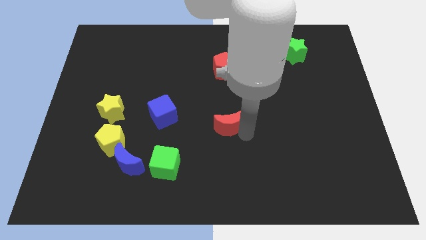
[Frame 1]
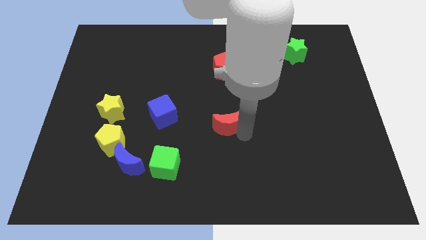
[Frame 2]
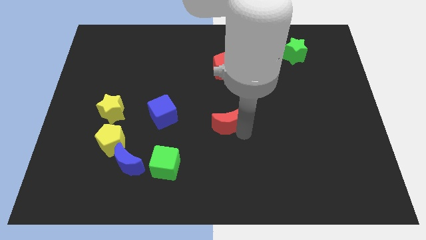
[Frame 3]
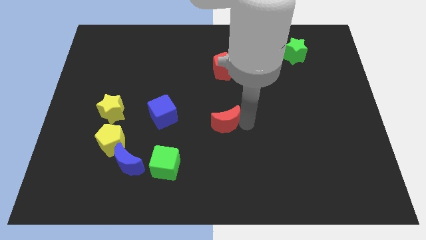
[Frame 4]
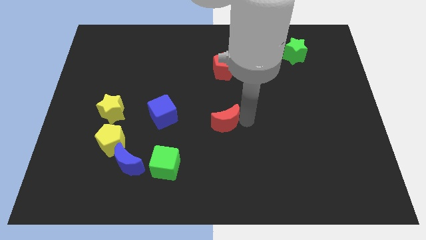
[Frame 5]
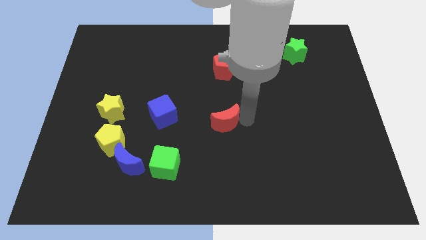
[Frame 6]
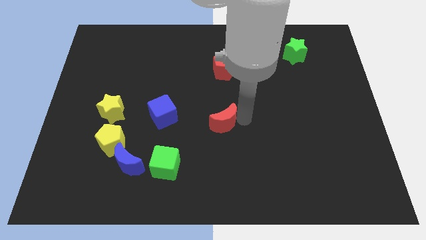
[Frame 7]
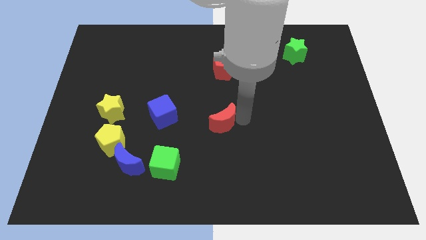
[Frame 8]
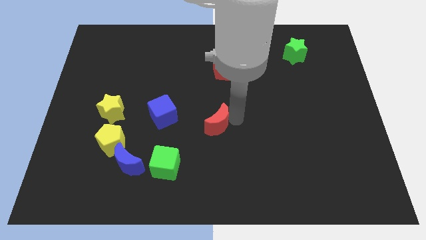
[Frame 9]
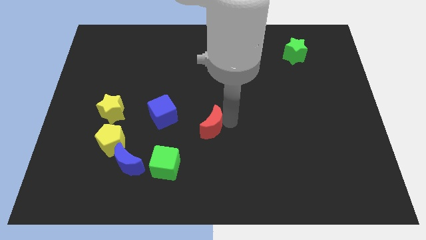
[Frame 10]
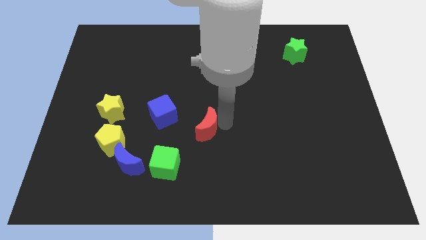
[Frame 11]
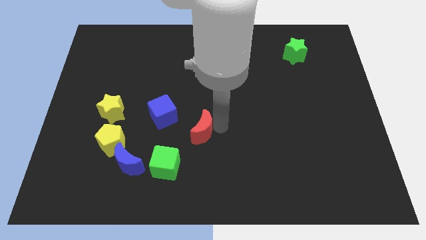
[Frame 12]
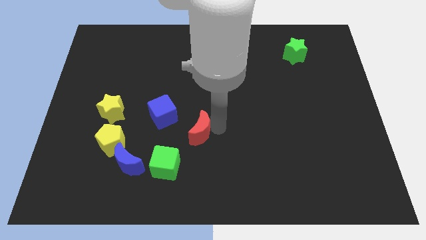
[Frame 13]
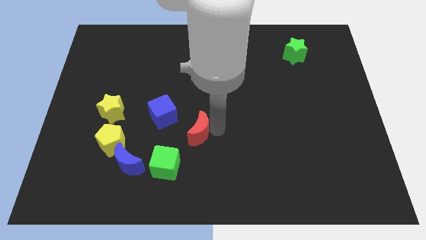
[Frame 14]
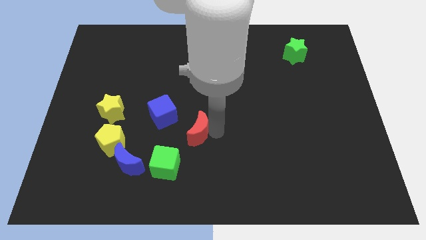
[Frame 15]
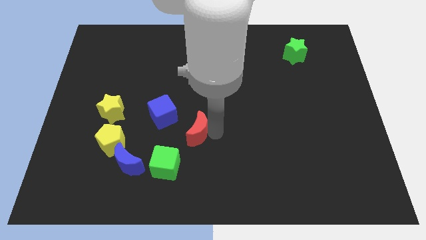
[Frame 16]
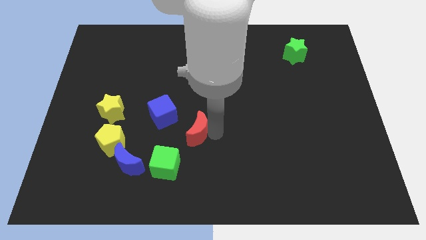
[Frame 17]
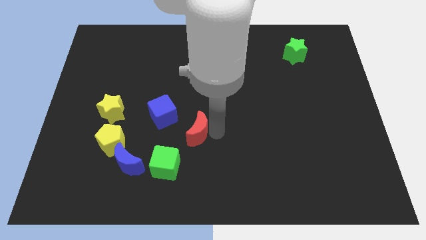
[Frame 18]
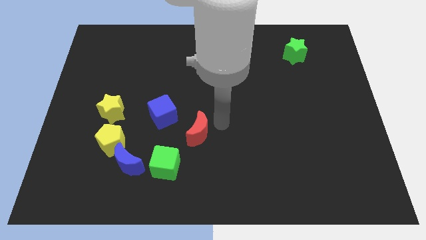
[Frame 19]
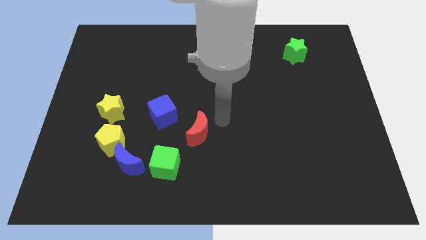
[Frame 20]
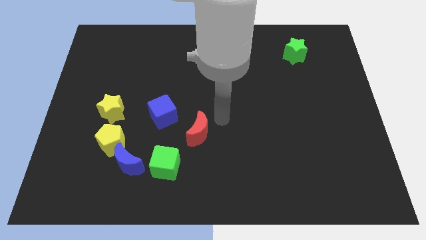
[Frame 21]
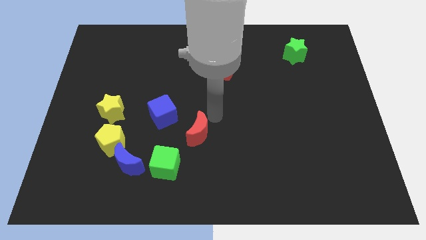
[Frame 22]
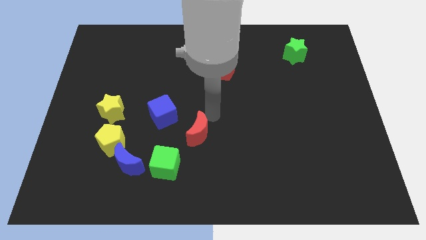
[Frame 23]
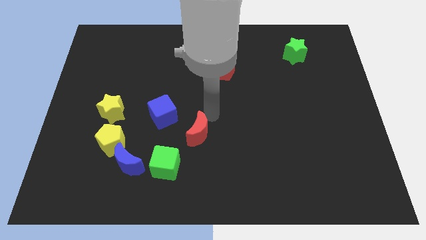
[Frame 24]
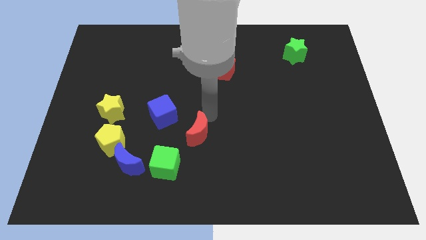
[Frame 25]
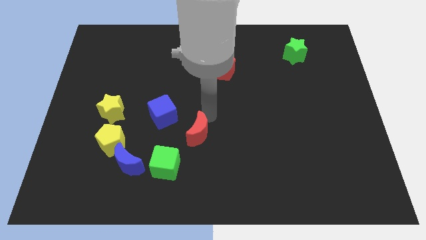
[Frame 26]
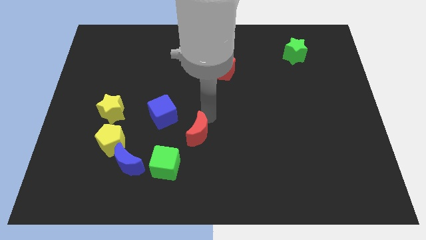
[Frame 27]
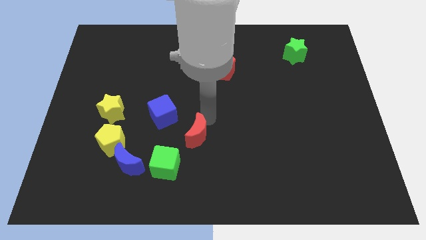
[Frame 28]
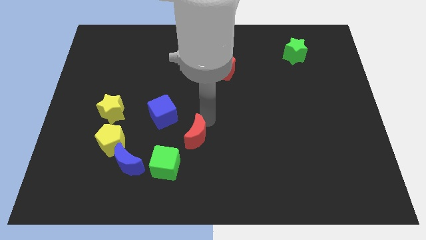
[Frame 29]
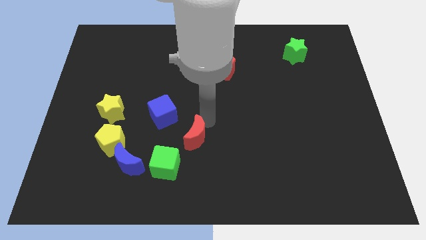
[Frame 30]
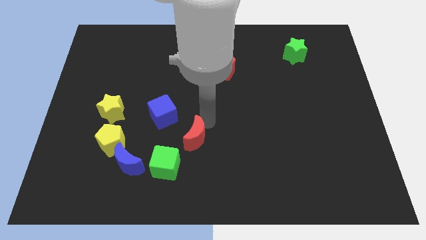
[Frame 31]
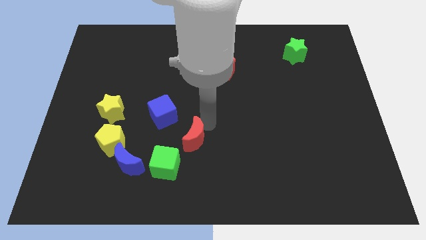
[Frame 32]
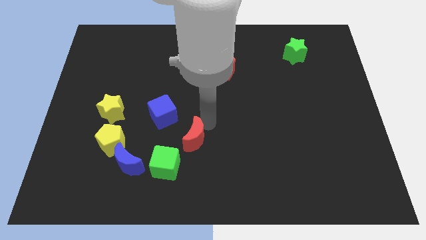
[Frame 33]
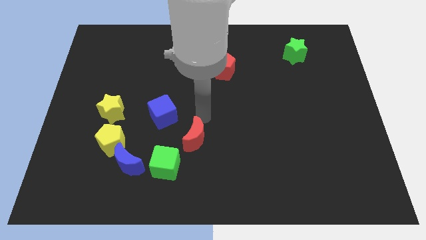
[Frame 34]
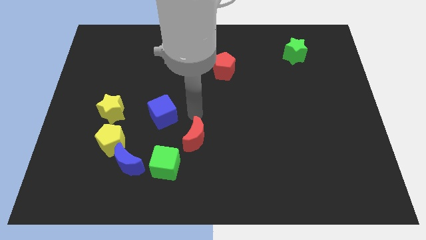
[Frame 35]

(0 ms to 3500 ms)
place the red moon towards green square

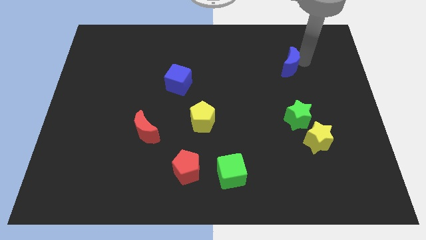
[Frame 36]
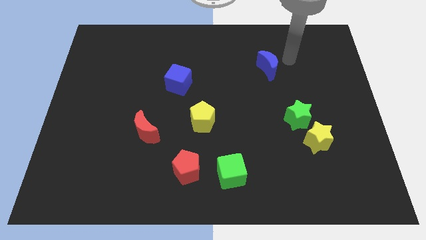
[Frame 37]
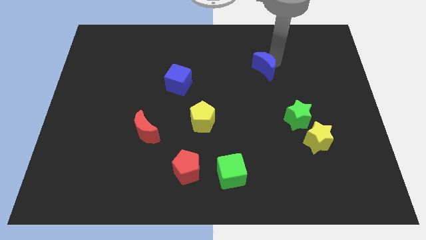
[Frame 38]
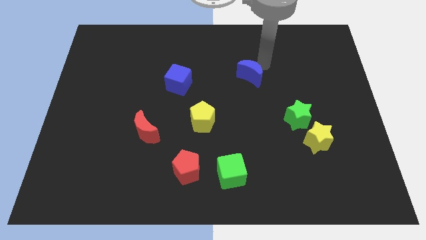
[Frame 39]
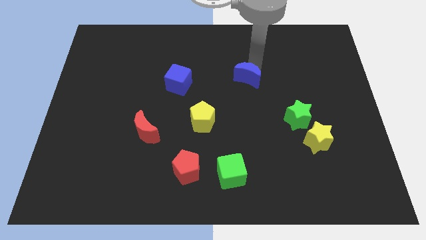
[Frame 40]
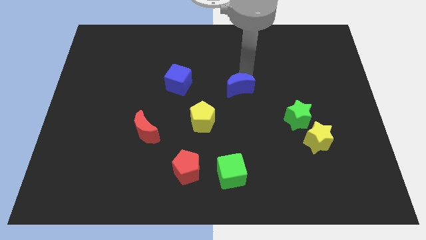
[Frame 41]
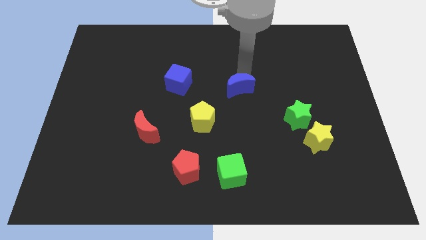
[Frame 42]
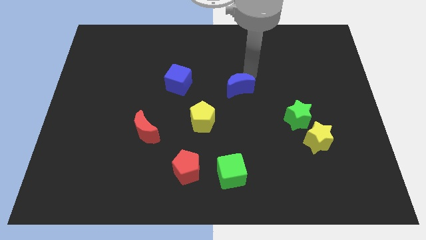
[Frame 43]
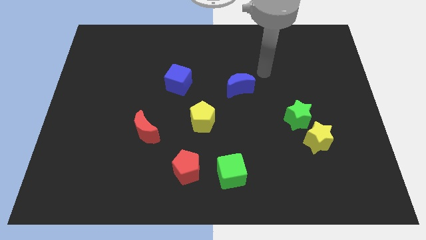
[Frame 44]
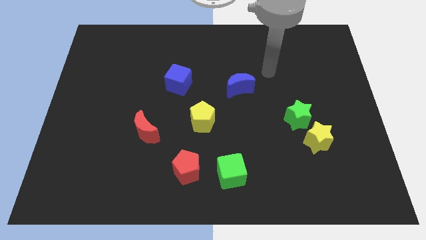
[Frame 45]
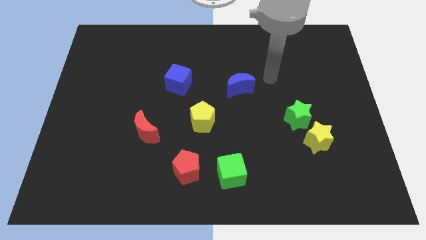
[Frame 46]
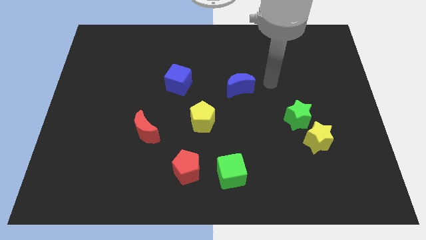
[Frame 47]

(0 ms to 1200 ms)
push blue moon vertically above green cube

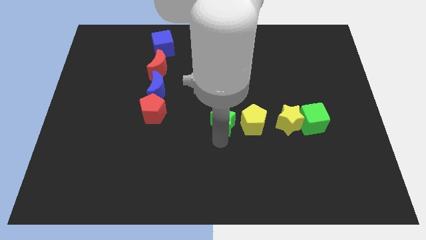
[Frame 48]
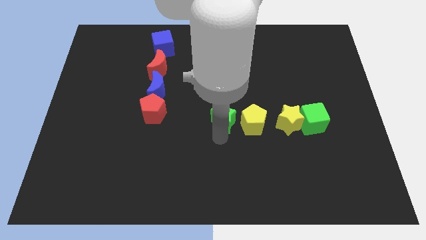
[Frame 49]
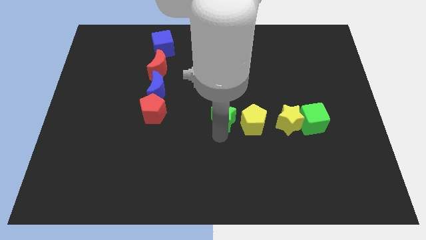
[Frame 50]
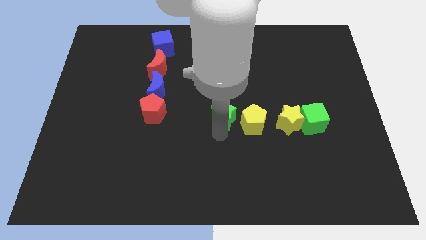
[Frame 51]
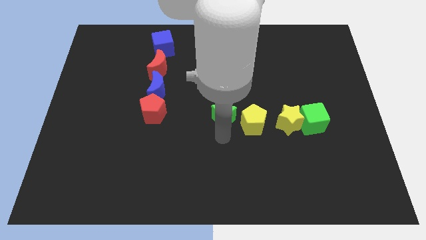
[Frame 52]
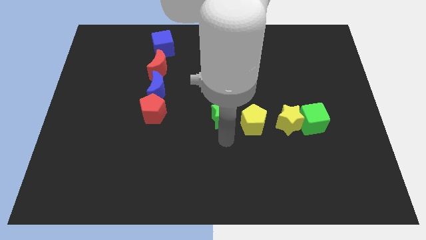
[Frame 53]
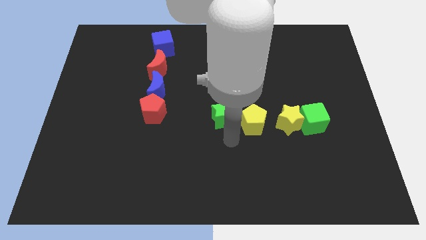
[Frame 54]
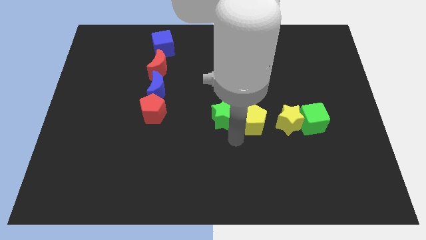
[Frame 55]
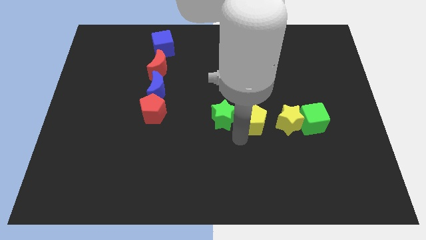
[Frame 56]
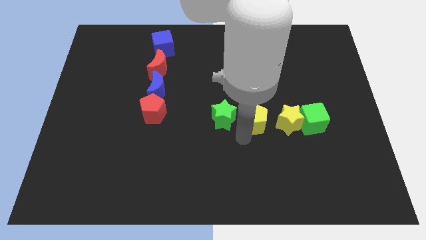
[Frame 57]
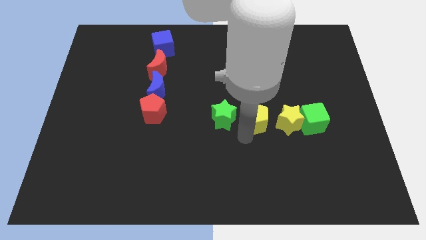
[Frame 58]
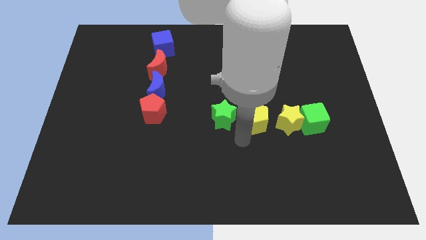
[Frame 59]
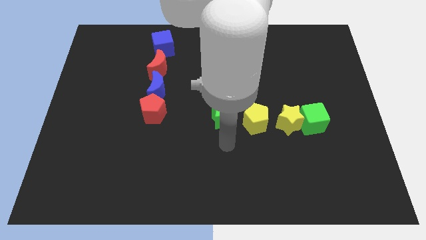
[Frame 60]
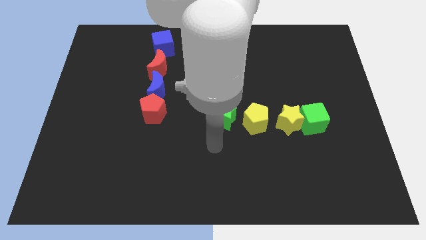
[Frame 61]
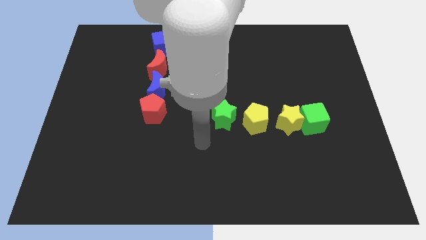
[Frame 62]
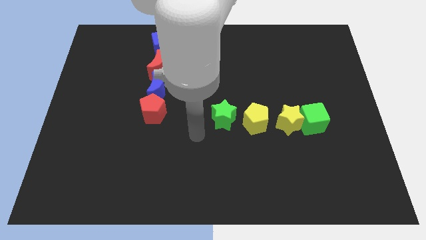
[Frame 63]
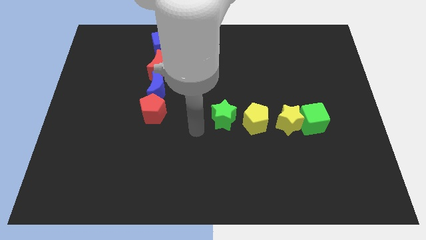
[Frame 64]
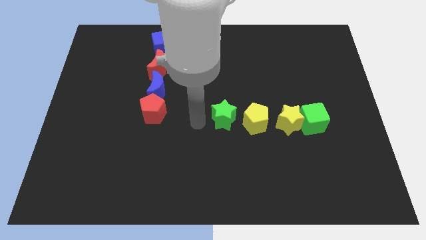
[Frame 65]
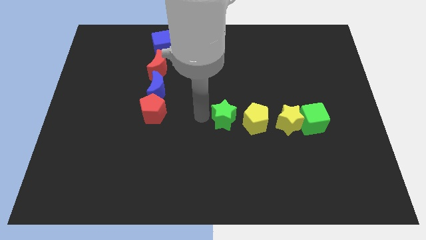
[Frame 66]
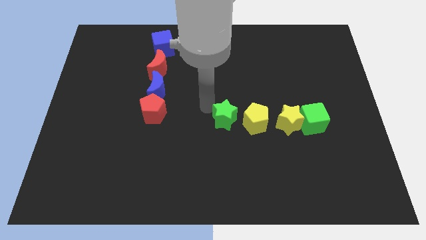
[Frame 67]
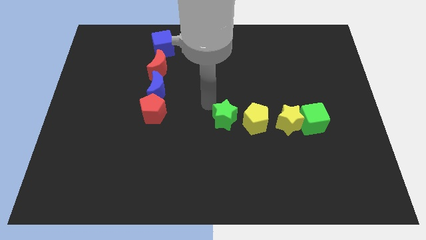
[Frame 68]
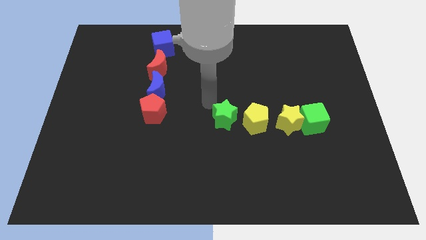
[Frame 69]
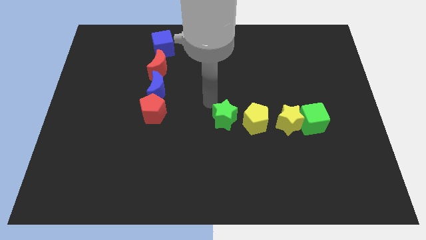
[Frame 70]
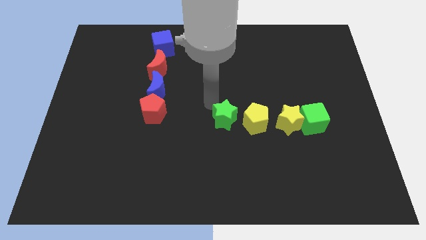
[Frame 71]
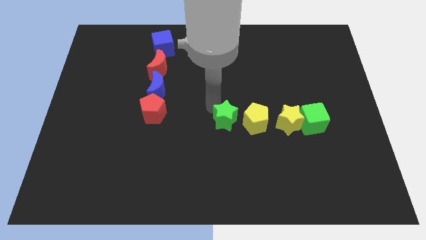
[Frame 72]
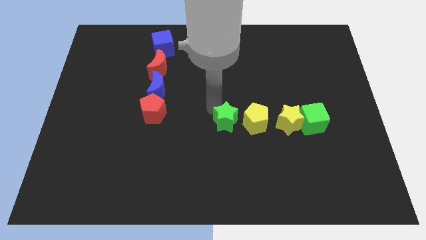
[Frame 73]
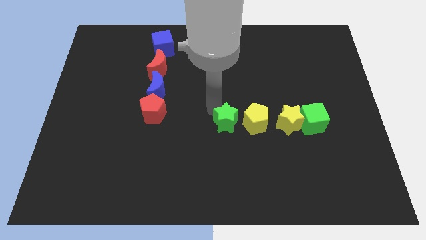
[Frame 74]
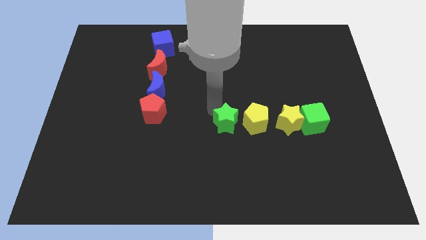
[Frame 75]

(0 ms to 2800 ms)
adjust the green star and yellow pentagon to form line of objects horizontally

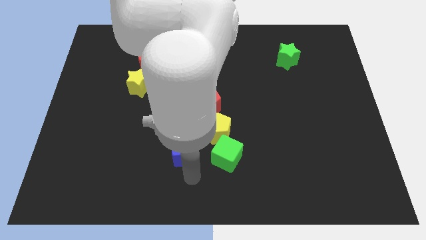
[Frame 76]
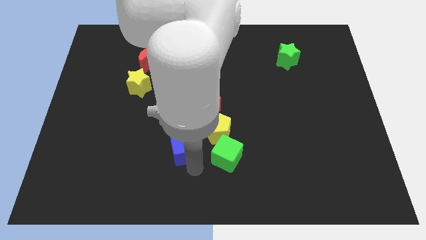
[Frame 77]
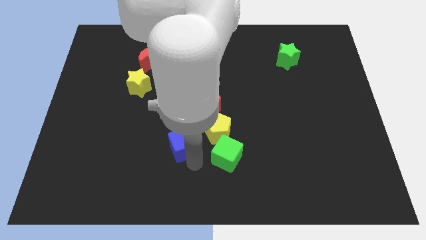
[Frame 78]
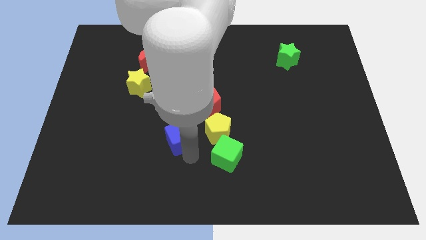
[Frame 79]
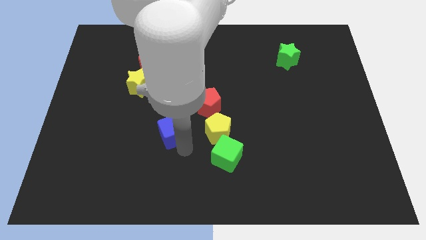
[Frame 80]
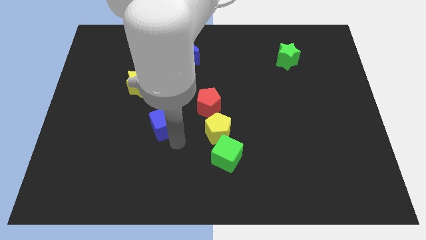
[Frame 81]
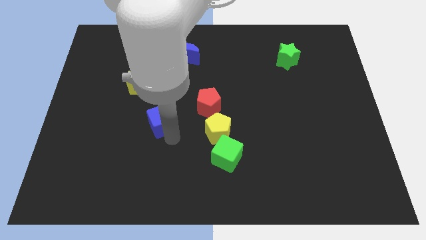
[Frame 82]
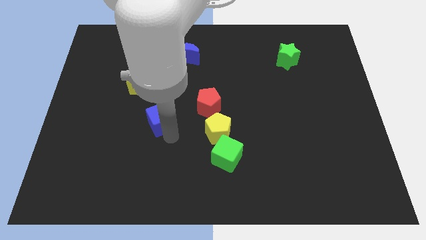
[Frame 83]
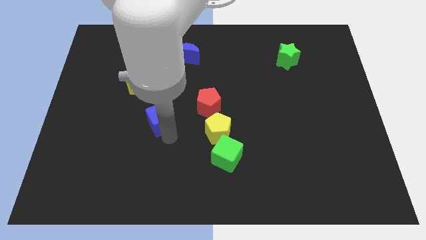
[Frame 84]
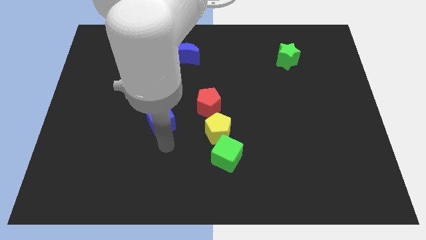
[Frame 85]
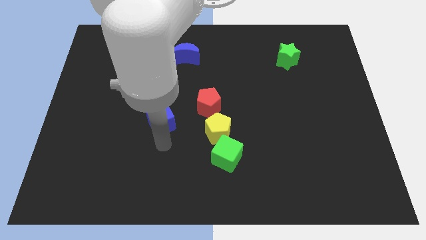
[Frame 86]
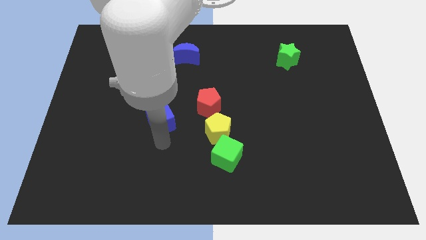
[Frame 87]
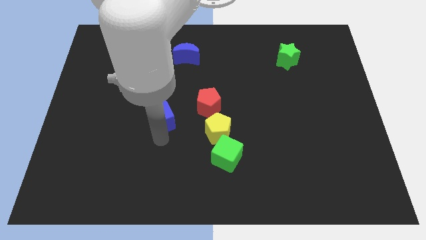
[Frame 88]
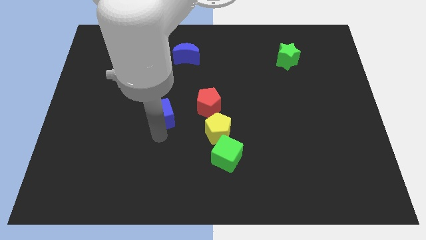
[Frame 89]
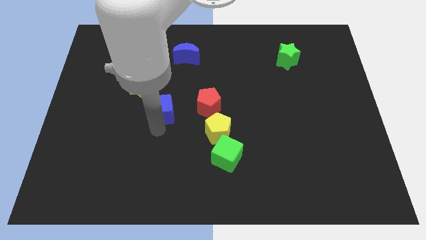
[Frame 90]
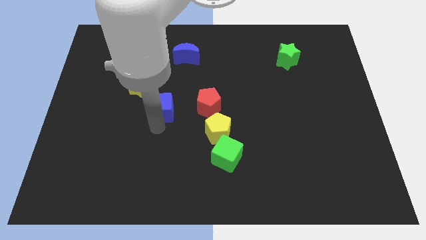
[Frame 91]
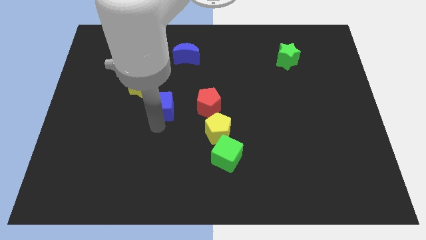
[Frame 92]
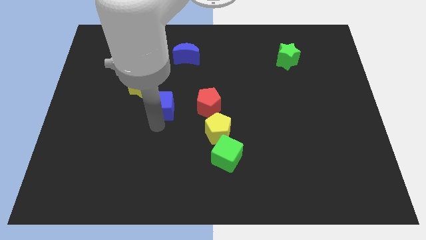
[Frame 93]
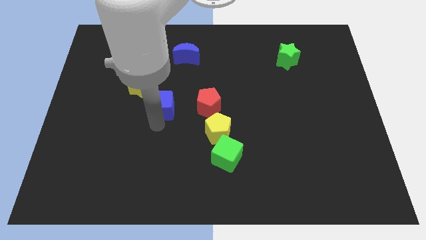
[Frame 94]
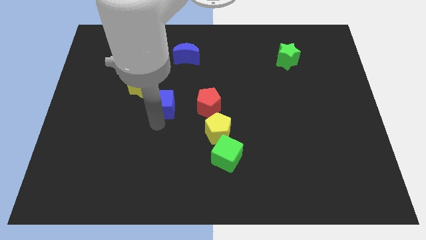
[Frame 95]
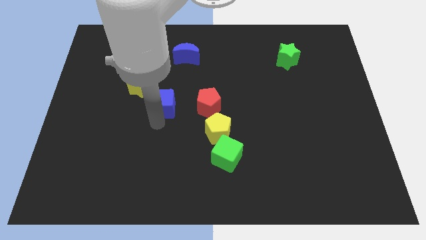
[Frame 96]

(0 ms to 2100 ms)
move the blue cube towards the yellow star
